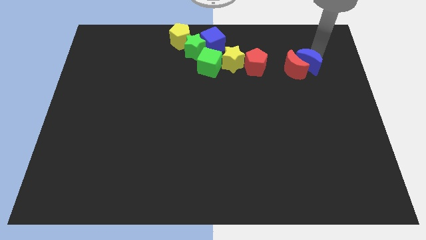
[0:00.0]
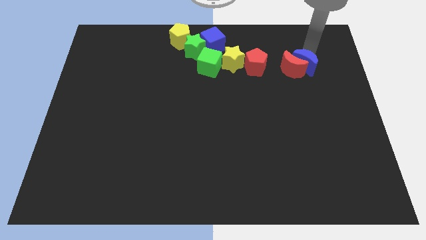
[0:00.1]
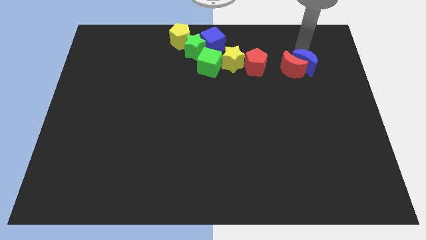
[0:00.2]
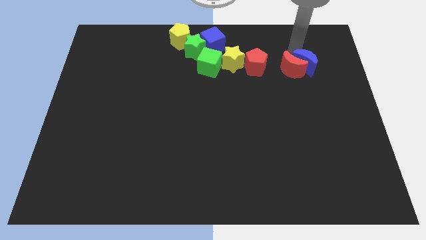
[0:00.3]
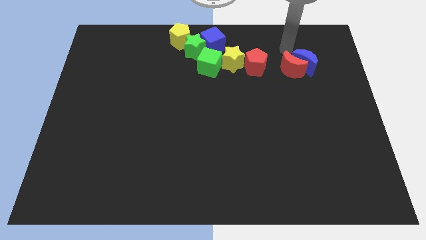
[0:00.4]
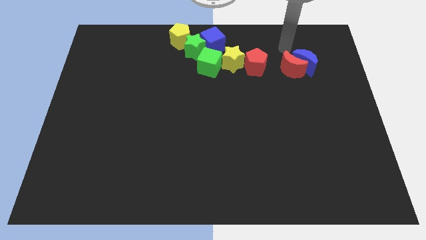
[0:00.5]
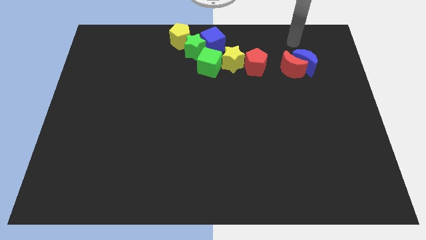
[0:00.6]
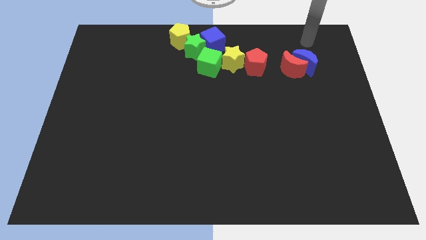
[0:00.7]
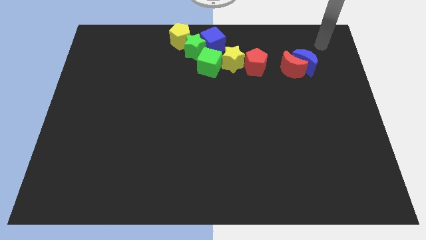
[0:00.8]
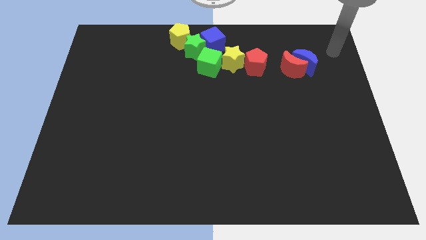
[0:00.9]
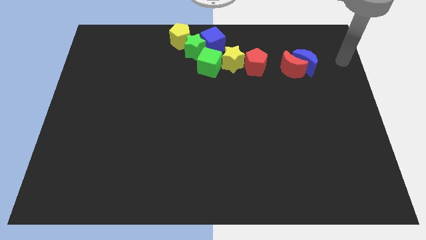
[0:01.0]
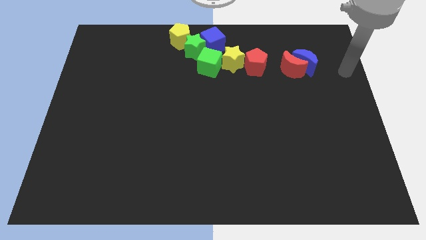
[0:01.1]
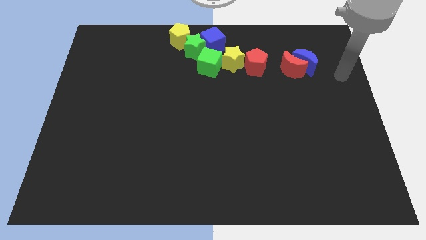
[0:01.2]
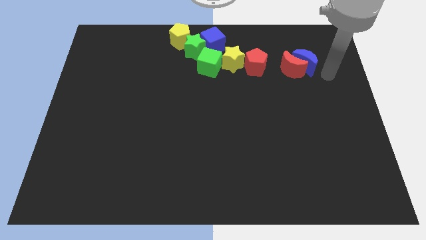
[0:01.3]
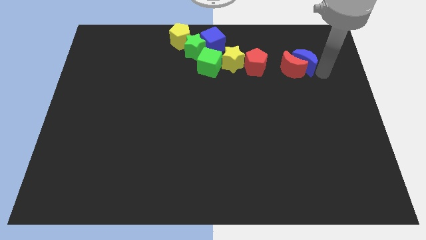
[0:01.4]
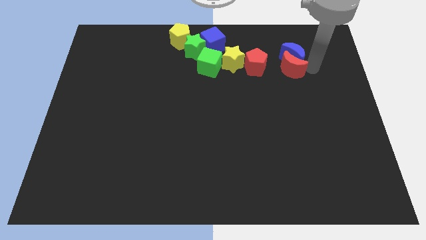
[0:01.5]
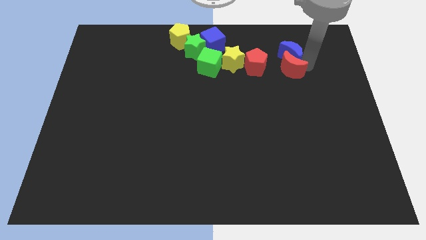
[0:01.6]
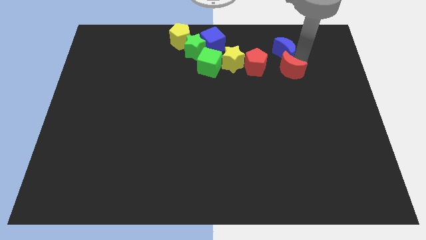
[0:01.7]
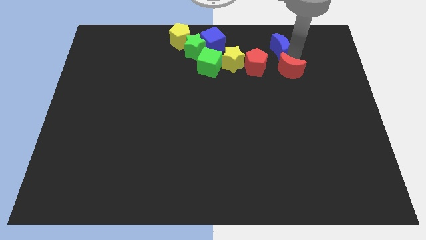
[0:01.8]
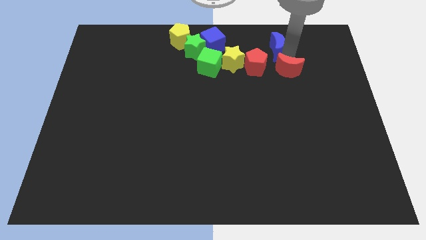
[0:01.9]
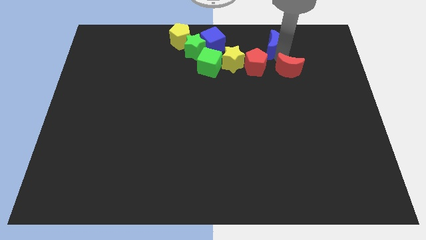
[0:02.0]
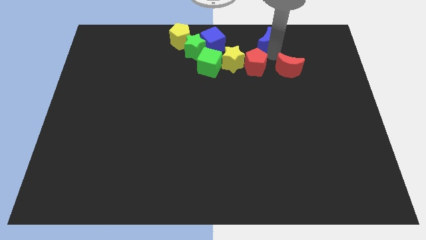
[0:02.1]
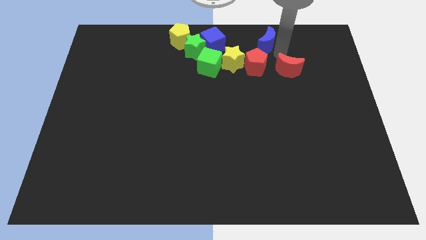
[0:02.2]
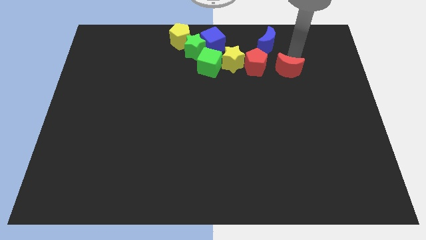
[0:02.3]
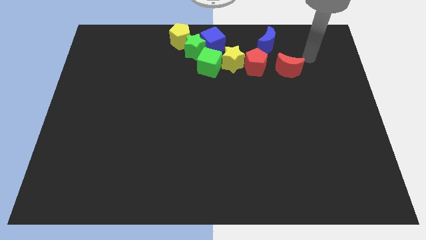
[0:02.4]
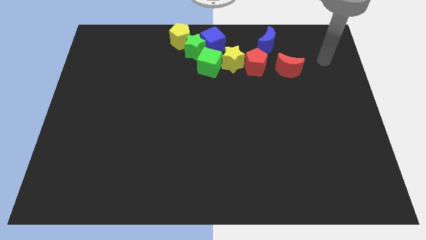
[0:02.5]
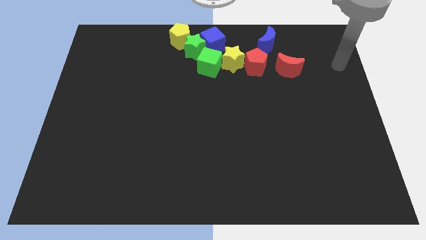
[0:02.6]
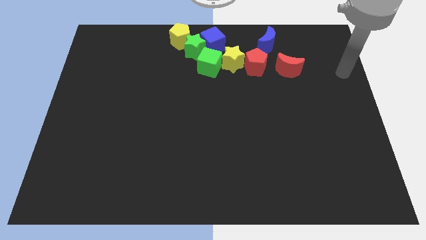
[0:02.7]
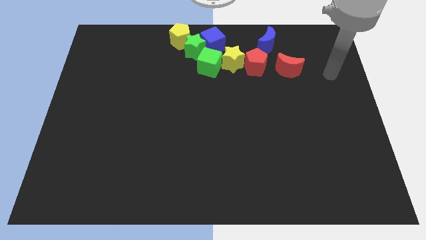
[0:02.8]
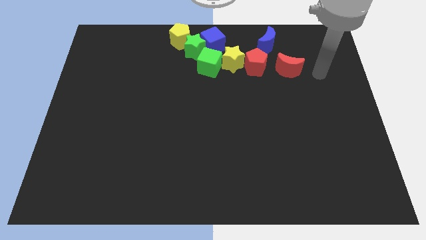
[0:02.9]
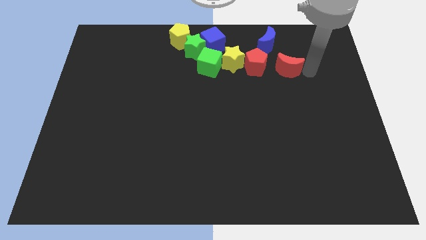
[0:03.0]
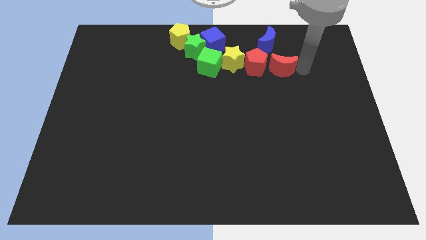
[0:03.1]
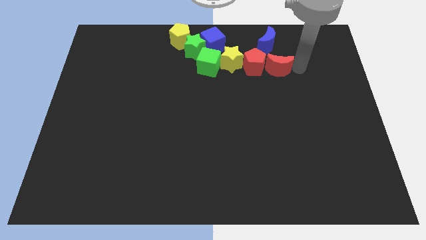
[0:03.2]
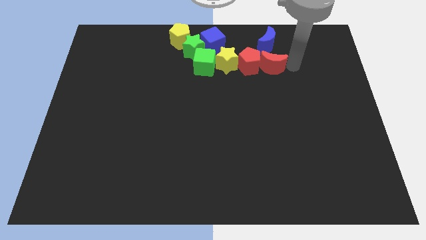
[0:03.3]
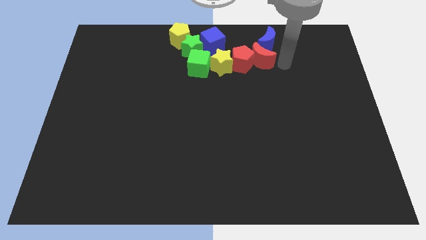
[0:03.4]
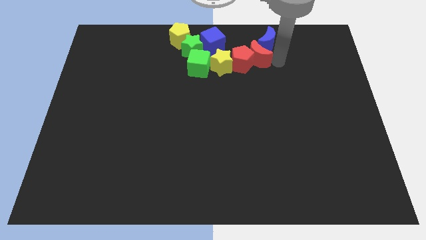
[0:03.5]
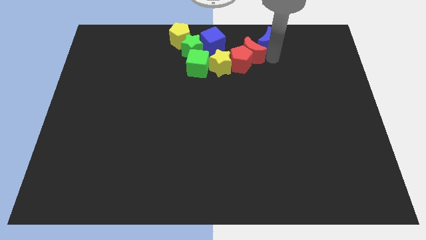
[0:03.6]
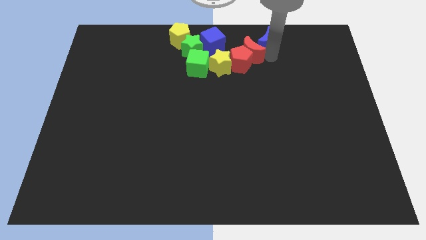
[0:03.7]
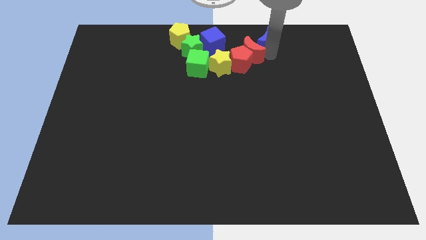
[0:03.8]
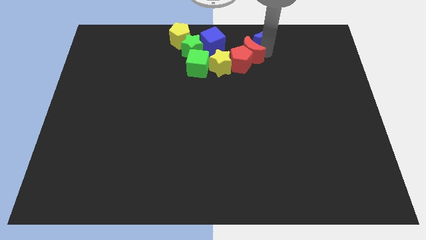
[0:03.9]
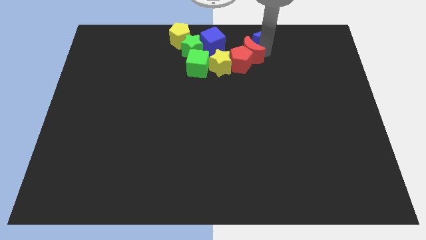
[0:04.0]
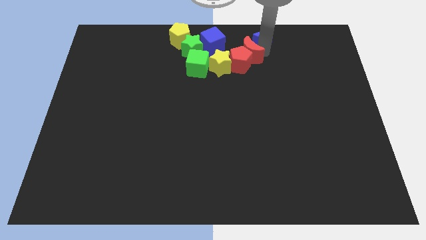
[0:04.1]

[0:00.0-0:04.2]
move blue and red moons together to the top right of red pentagon

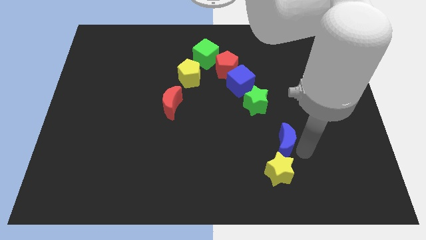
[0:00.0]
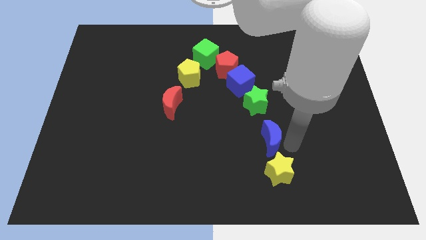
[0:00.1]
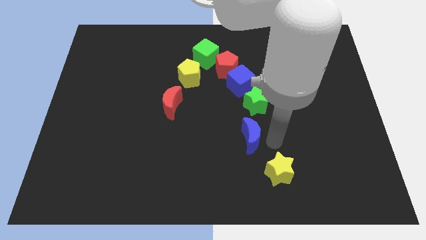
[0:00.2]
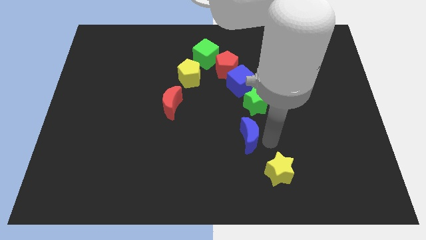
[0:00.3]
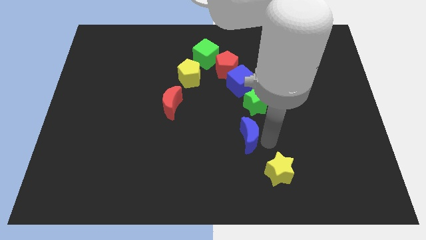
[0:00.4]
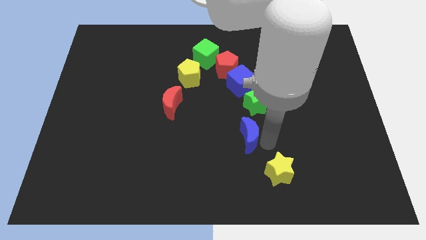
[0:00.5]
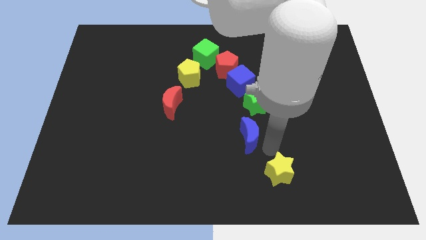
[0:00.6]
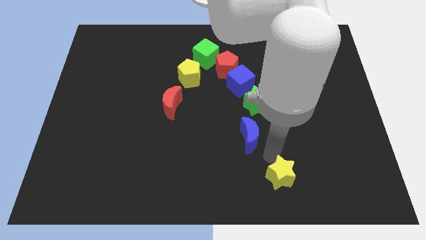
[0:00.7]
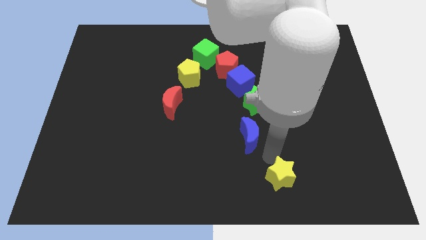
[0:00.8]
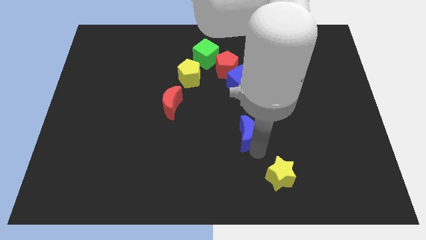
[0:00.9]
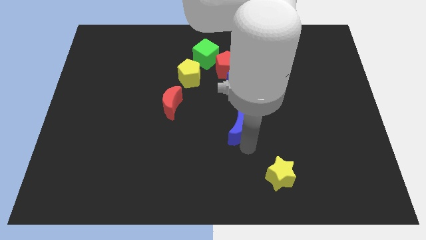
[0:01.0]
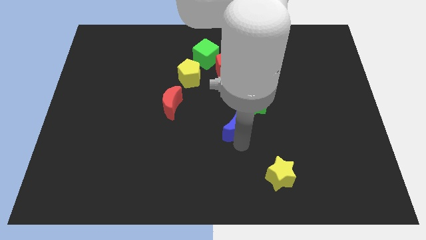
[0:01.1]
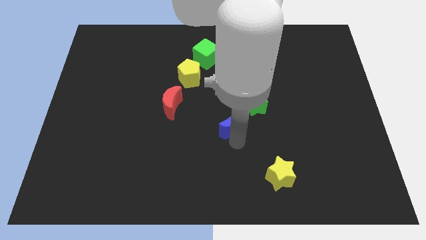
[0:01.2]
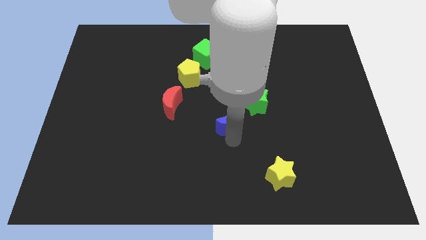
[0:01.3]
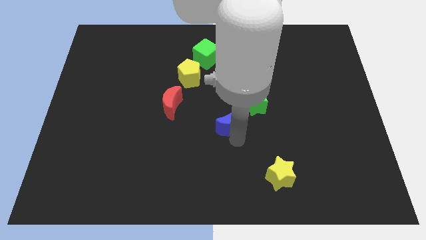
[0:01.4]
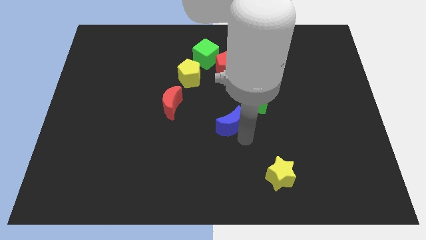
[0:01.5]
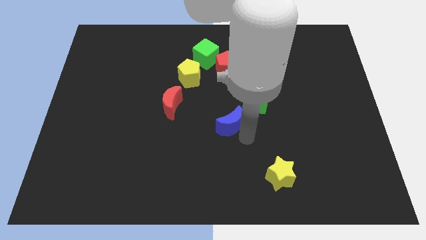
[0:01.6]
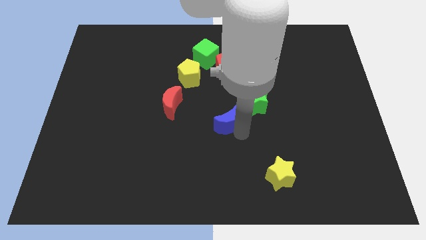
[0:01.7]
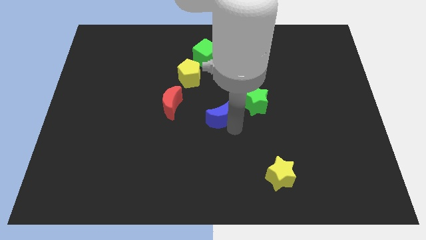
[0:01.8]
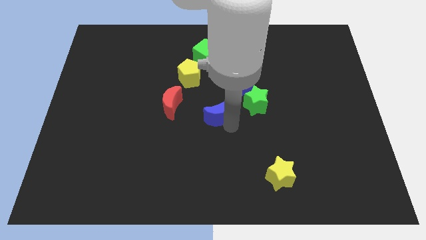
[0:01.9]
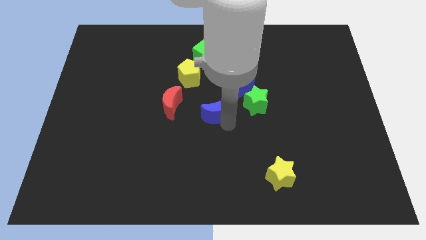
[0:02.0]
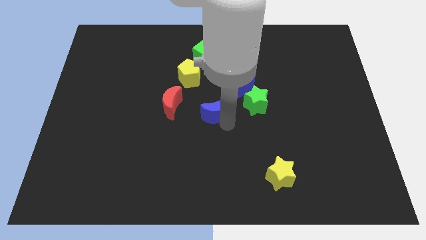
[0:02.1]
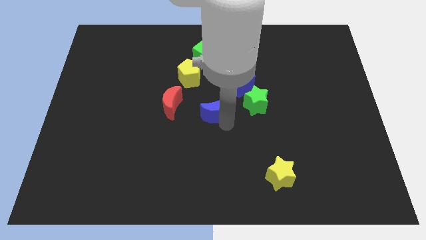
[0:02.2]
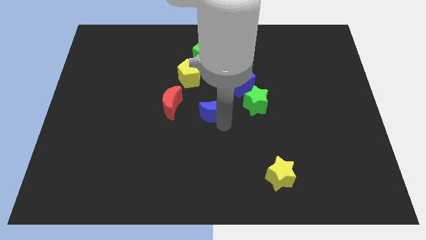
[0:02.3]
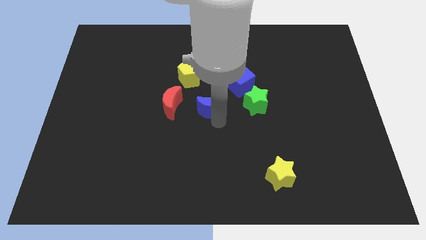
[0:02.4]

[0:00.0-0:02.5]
place the blue moon left to the green star

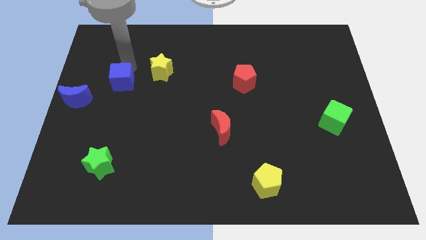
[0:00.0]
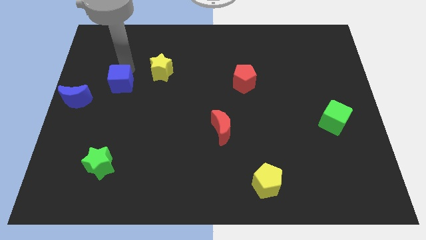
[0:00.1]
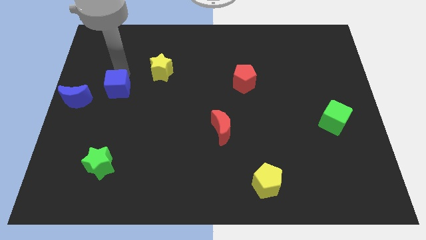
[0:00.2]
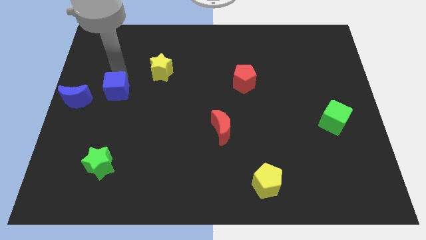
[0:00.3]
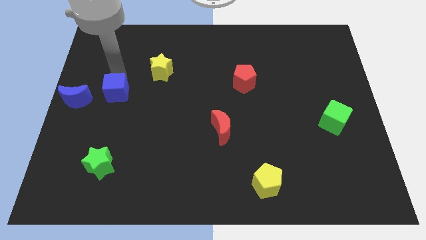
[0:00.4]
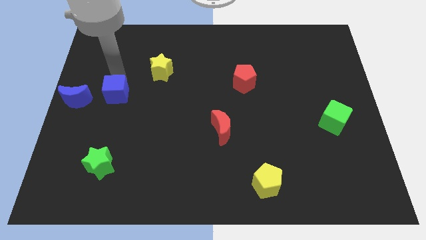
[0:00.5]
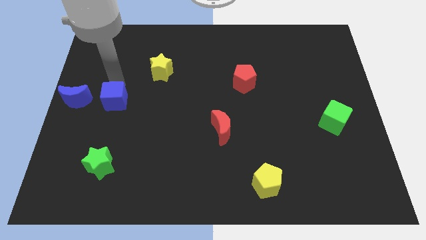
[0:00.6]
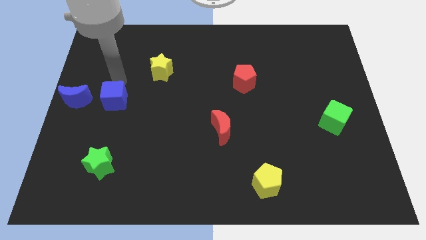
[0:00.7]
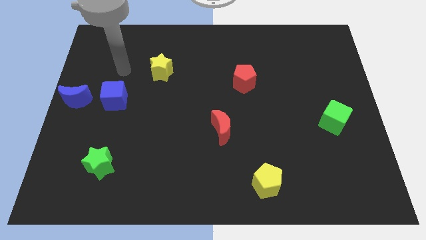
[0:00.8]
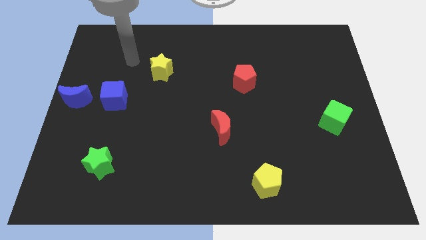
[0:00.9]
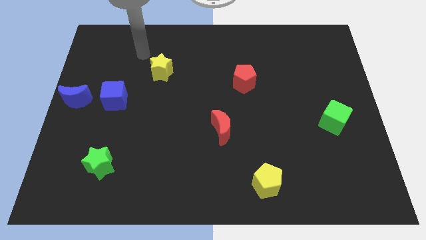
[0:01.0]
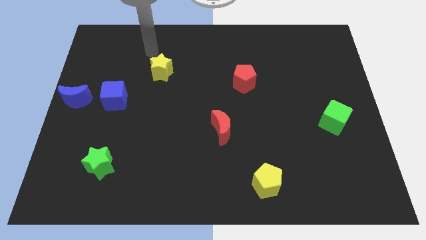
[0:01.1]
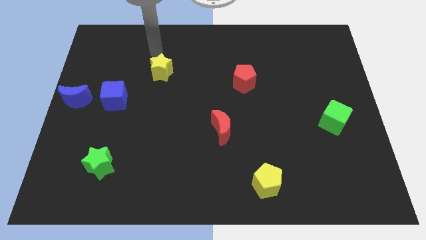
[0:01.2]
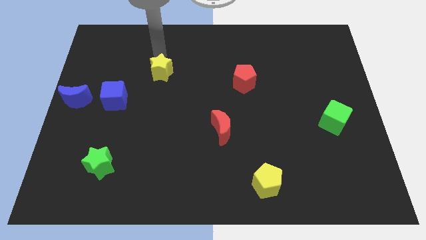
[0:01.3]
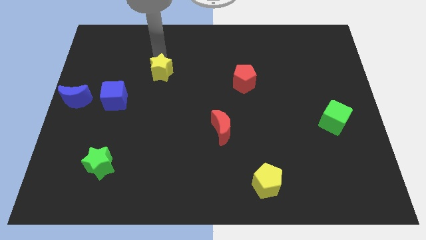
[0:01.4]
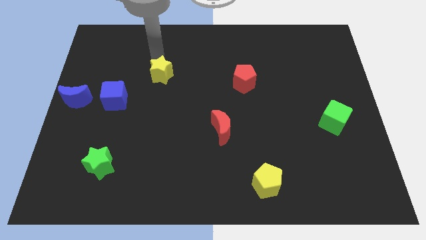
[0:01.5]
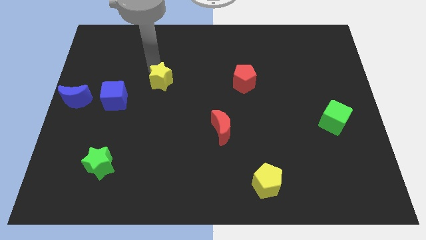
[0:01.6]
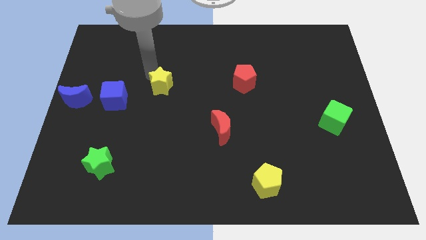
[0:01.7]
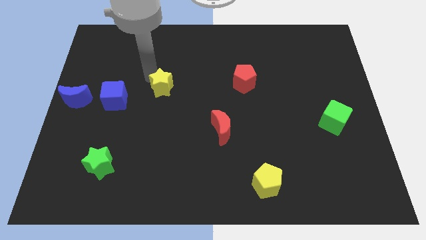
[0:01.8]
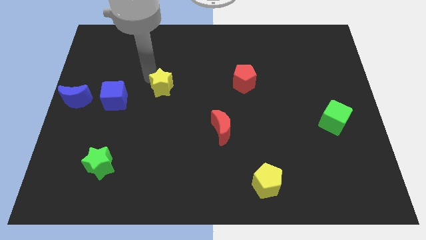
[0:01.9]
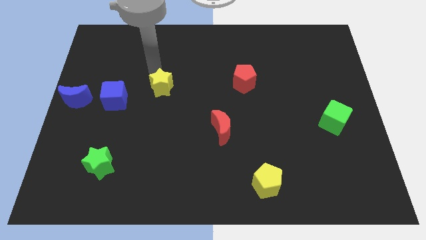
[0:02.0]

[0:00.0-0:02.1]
push the yellow star towards the right of the blue cube
